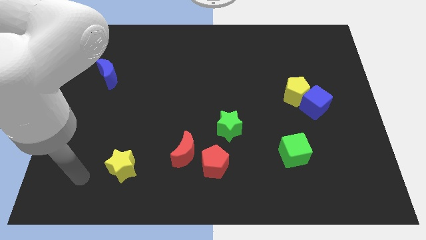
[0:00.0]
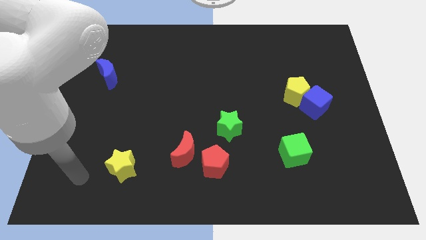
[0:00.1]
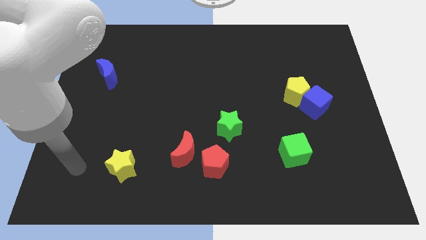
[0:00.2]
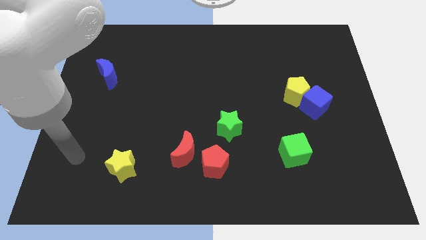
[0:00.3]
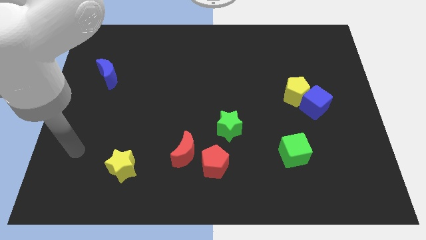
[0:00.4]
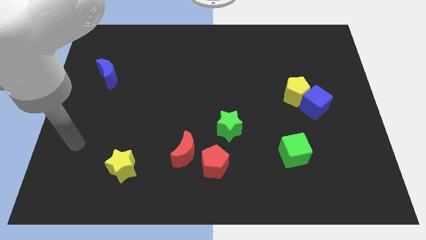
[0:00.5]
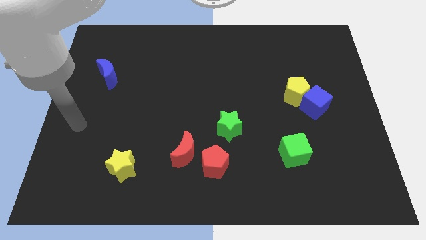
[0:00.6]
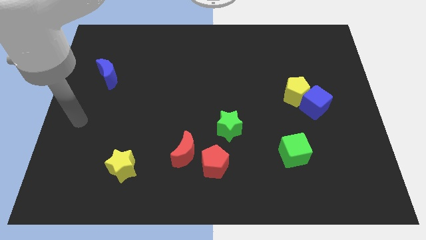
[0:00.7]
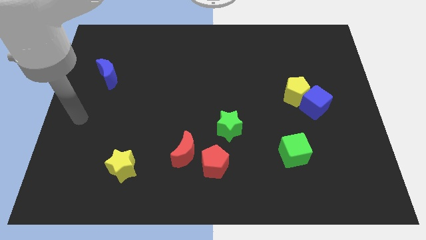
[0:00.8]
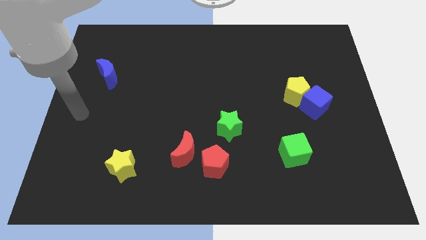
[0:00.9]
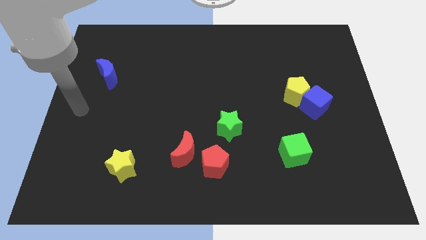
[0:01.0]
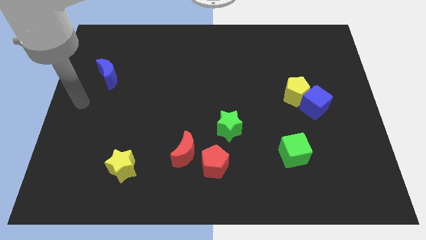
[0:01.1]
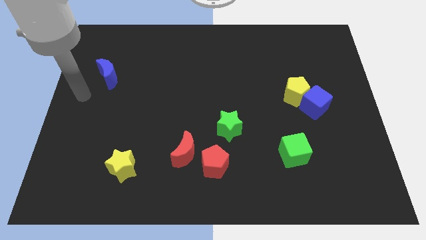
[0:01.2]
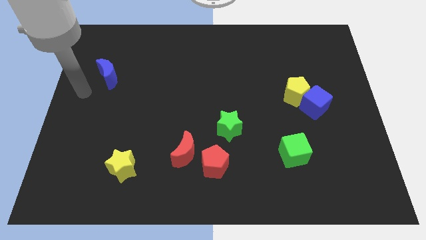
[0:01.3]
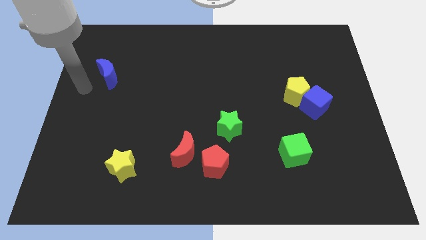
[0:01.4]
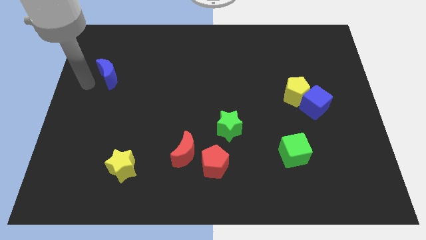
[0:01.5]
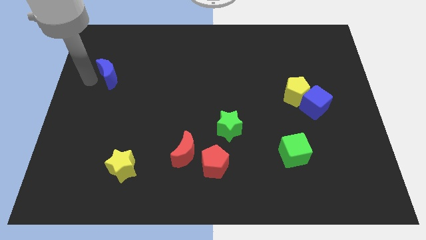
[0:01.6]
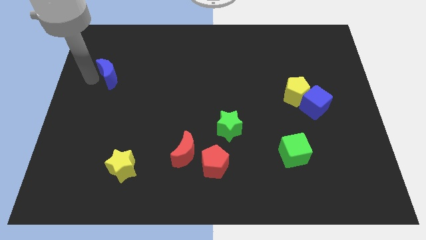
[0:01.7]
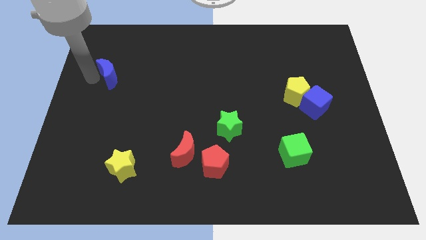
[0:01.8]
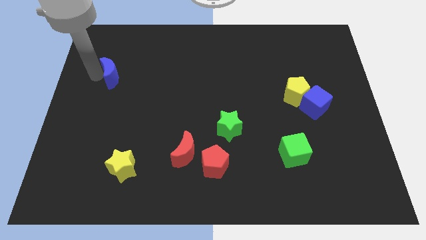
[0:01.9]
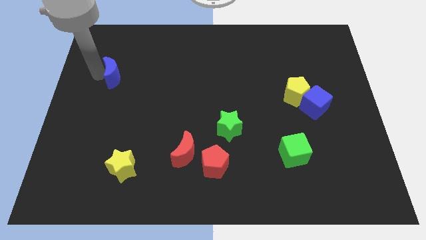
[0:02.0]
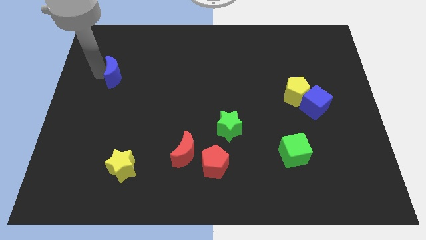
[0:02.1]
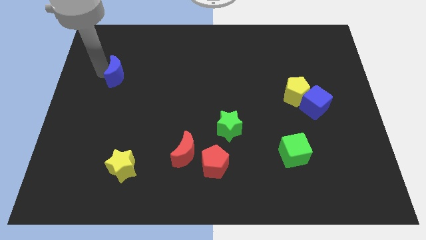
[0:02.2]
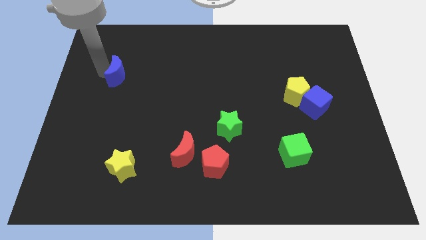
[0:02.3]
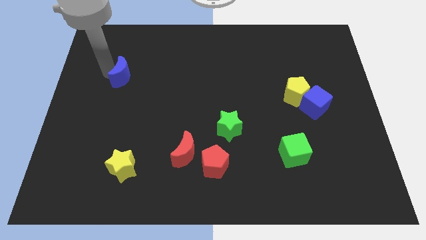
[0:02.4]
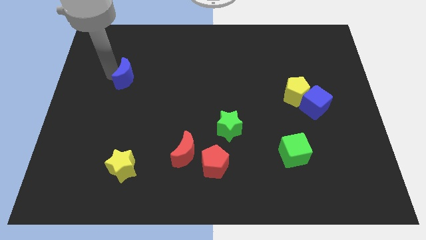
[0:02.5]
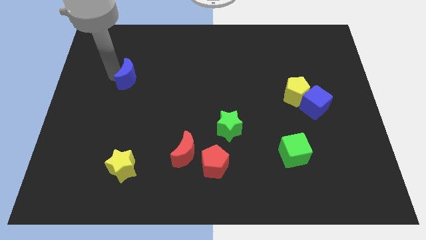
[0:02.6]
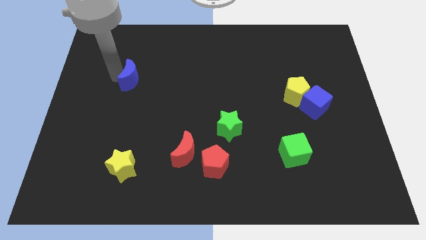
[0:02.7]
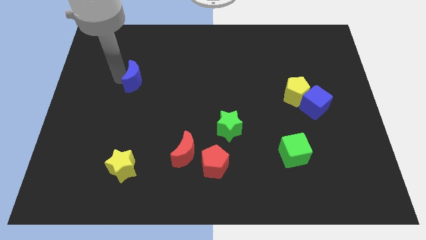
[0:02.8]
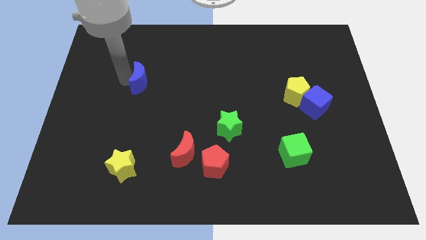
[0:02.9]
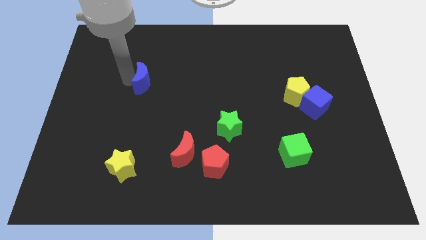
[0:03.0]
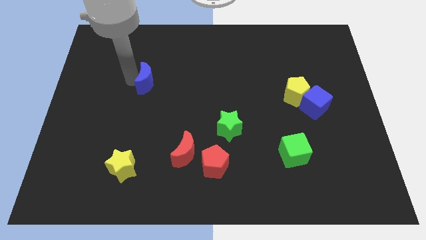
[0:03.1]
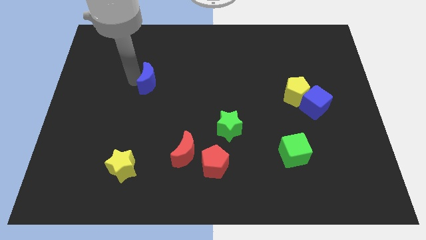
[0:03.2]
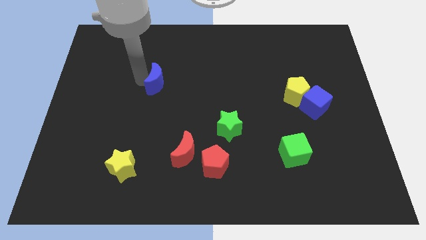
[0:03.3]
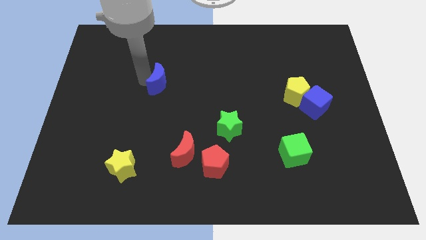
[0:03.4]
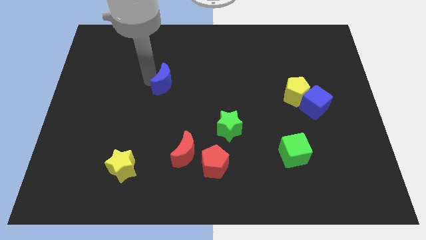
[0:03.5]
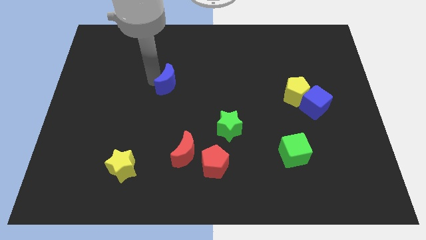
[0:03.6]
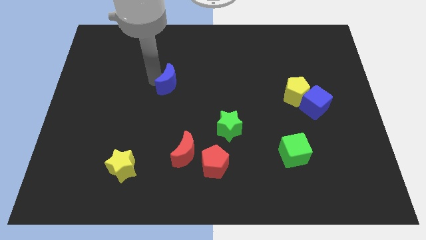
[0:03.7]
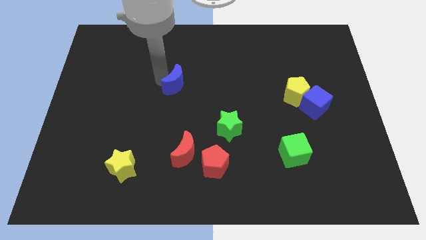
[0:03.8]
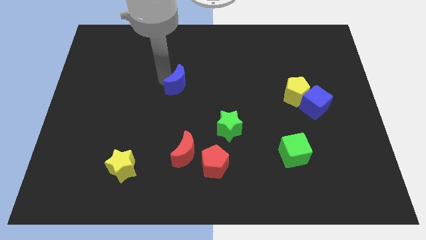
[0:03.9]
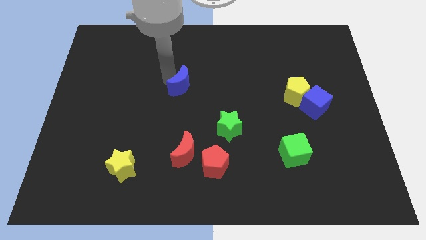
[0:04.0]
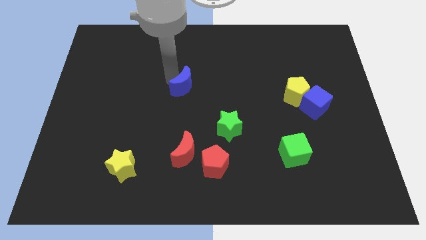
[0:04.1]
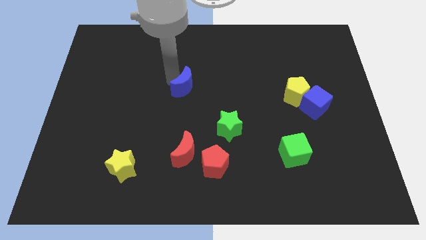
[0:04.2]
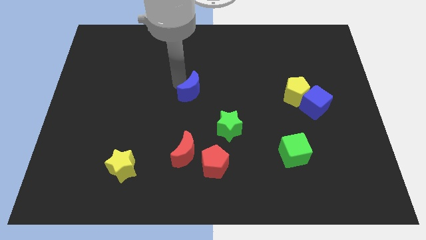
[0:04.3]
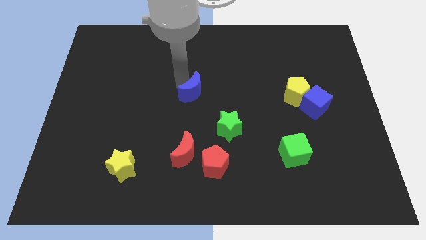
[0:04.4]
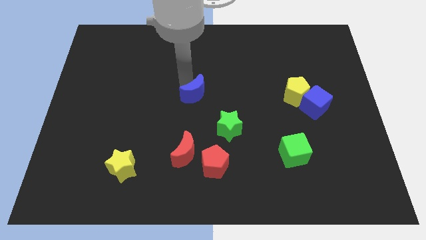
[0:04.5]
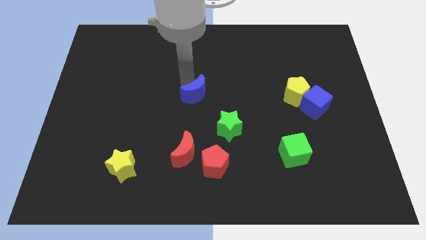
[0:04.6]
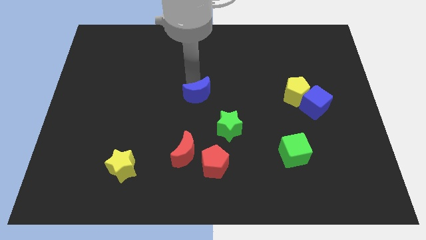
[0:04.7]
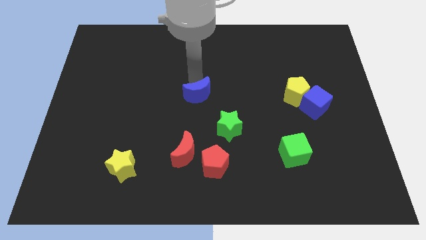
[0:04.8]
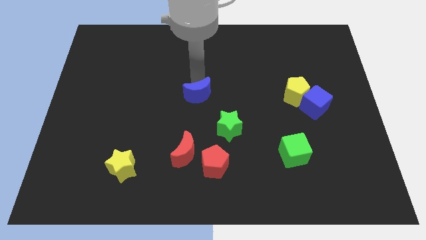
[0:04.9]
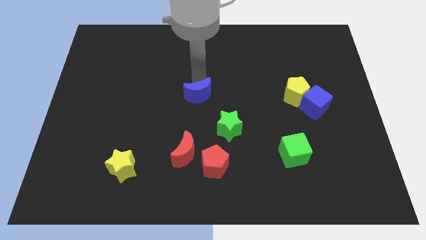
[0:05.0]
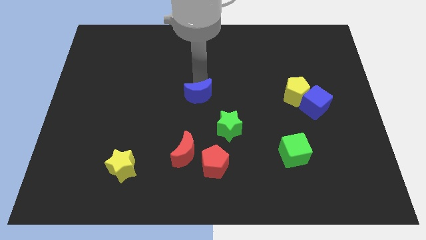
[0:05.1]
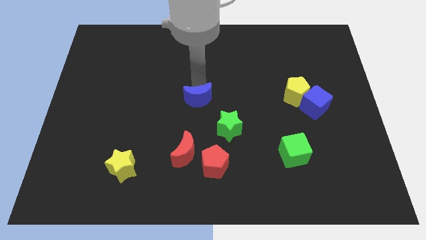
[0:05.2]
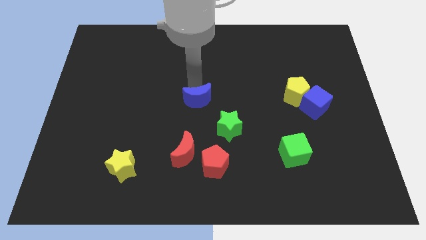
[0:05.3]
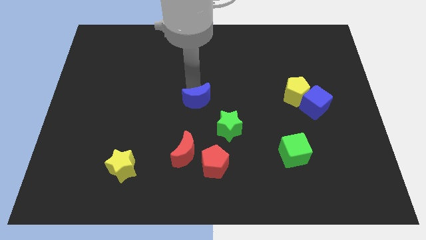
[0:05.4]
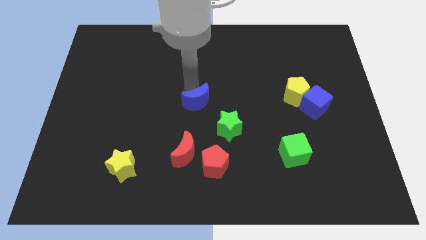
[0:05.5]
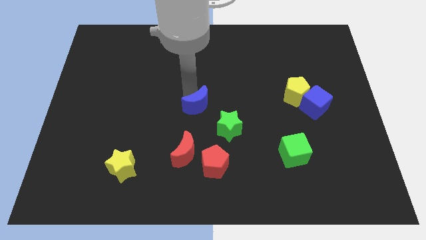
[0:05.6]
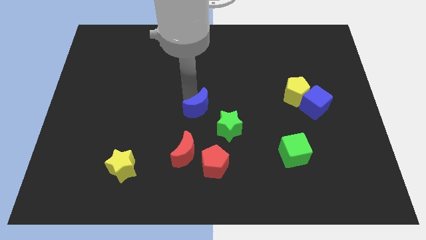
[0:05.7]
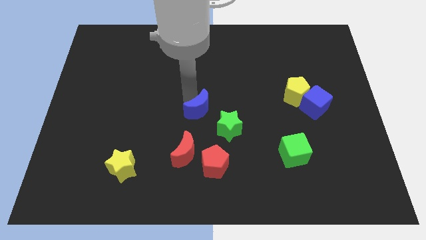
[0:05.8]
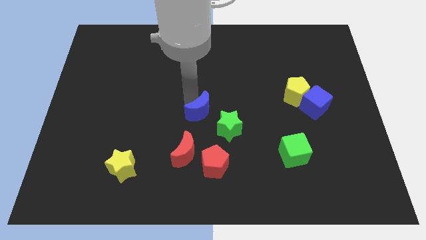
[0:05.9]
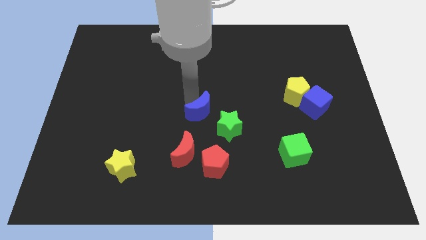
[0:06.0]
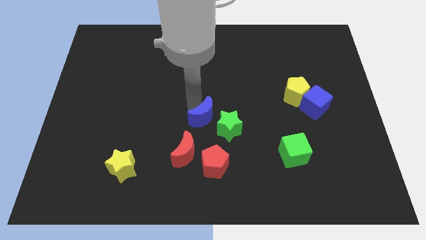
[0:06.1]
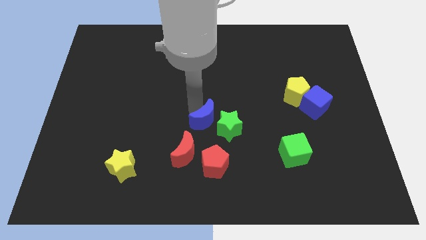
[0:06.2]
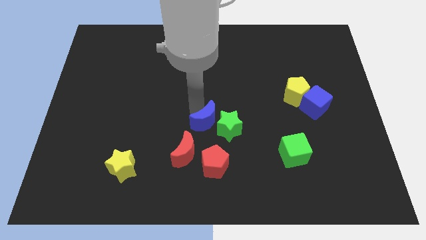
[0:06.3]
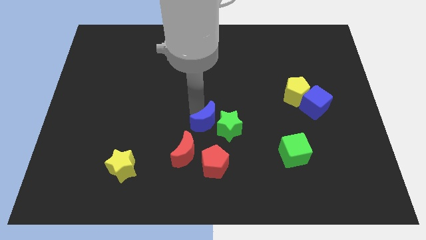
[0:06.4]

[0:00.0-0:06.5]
slide the blue moon close to the green star

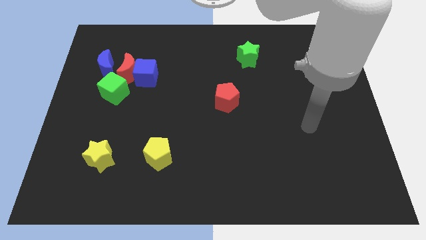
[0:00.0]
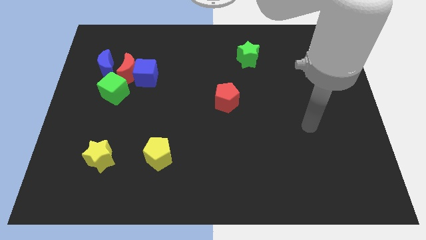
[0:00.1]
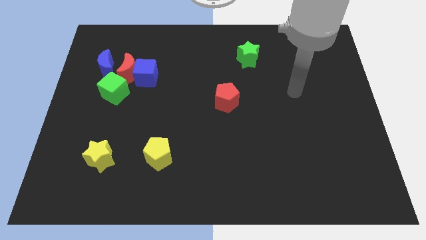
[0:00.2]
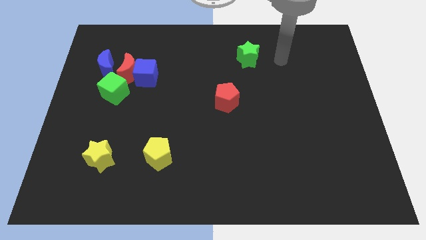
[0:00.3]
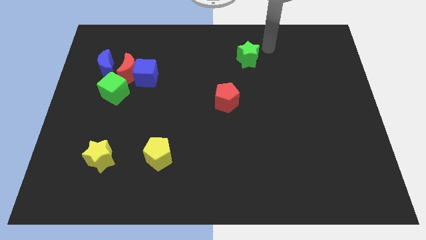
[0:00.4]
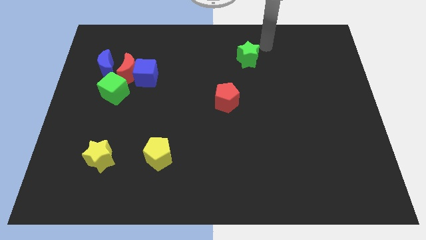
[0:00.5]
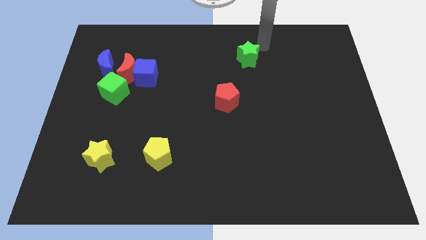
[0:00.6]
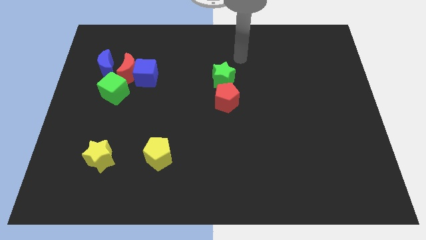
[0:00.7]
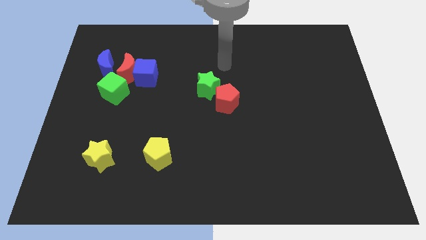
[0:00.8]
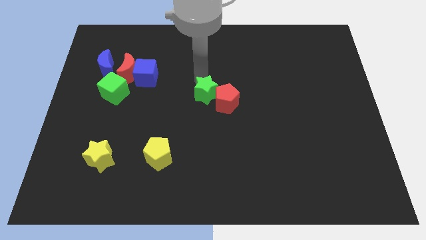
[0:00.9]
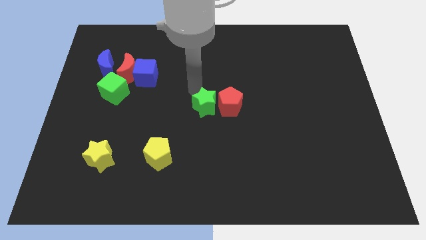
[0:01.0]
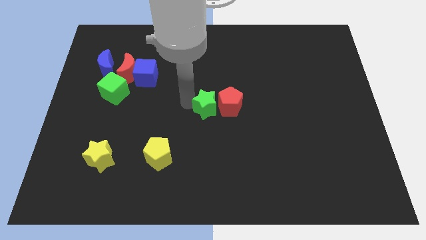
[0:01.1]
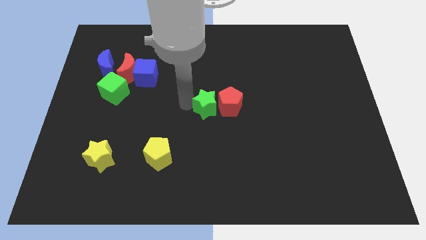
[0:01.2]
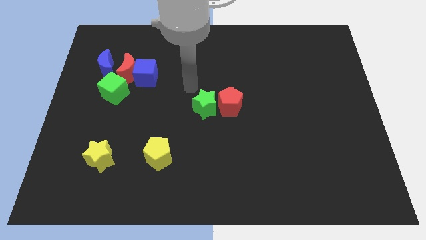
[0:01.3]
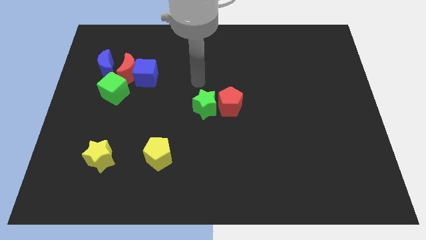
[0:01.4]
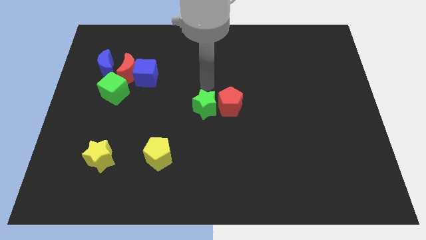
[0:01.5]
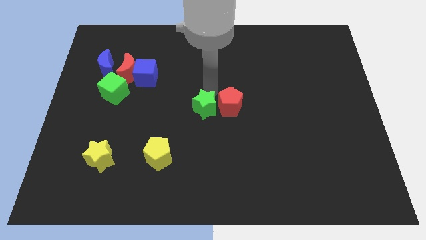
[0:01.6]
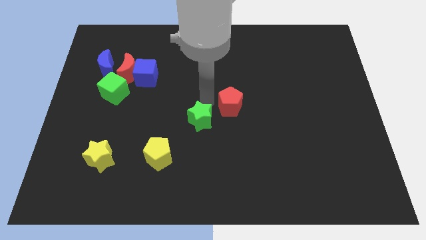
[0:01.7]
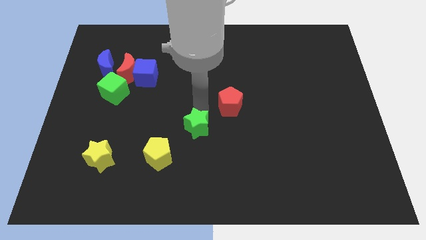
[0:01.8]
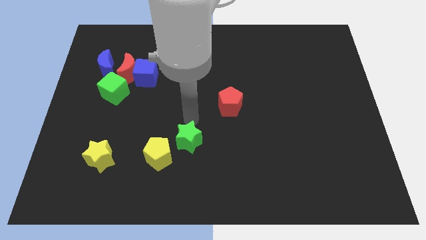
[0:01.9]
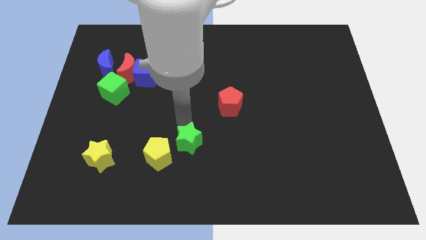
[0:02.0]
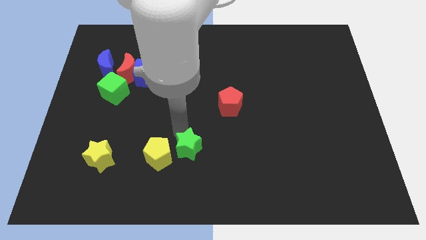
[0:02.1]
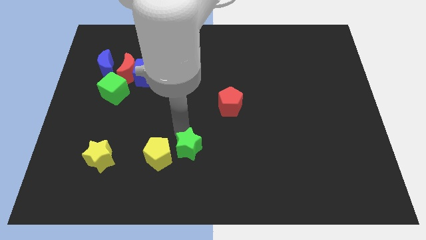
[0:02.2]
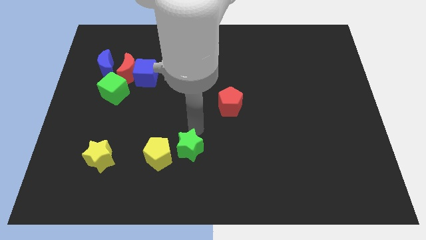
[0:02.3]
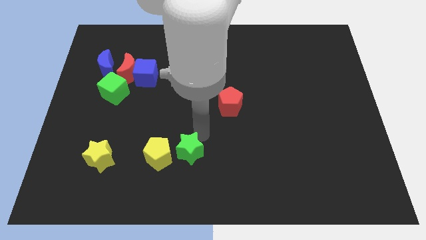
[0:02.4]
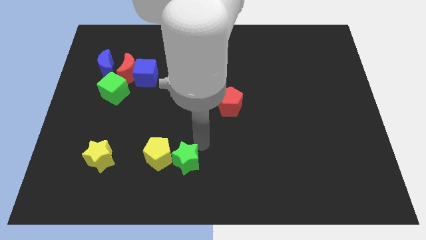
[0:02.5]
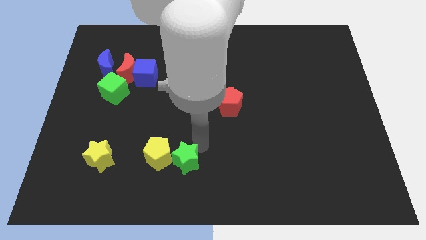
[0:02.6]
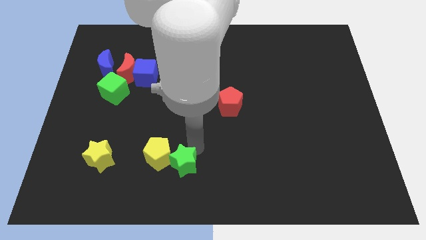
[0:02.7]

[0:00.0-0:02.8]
move the green star close to the yellow pentagon
